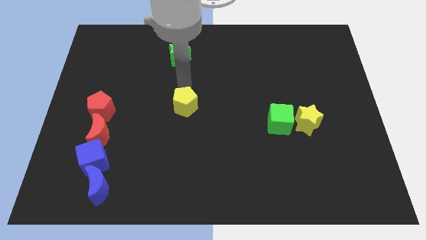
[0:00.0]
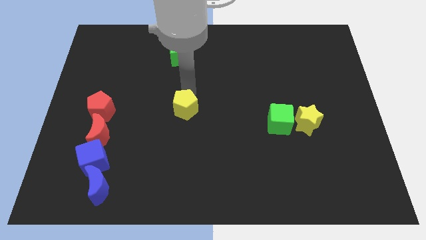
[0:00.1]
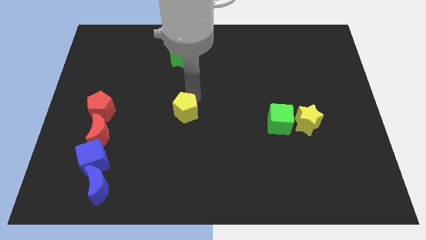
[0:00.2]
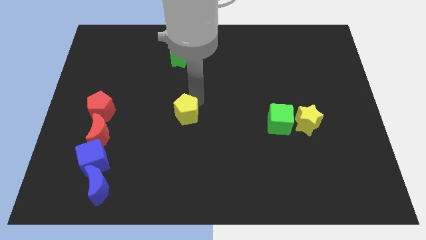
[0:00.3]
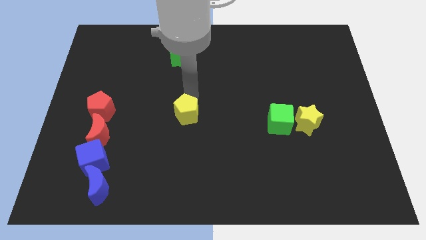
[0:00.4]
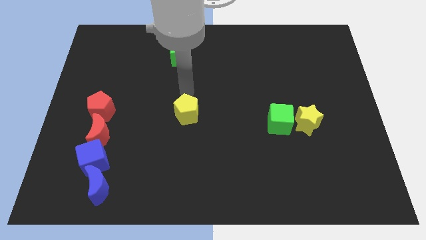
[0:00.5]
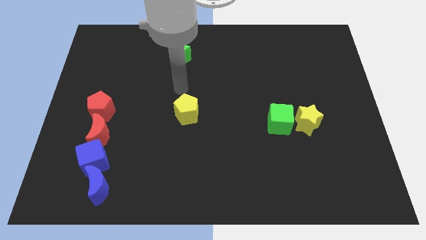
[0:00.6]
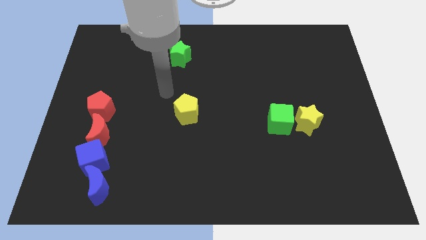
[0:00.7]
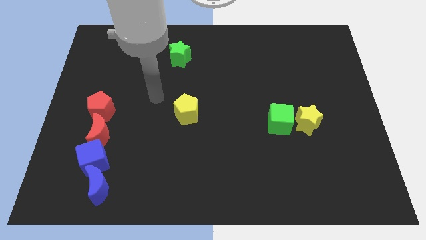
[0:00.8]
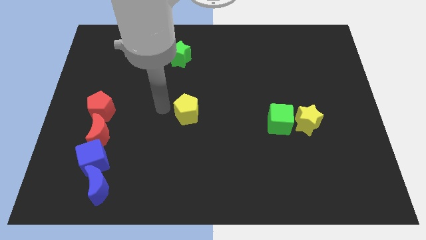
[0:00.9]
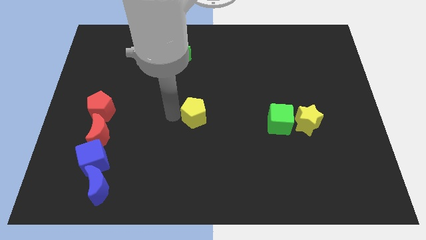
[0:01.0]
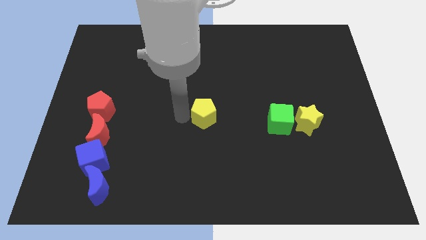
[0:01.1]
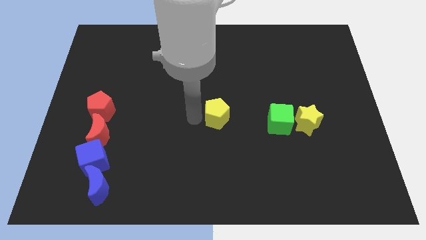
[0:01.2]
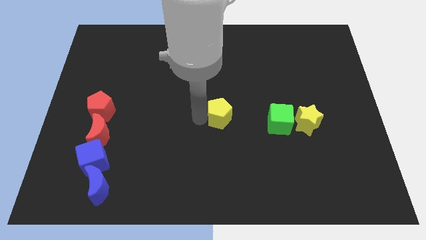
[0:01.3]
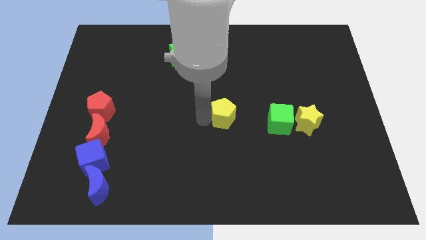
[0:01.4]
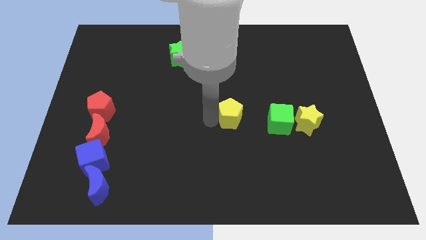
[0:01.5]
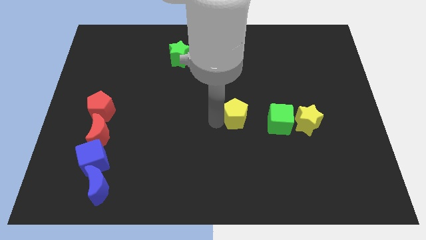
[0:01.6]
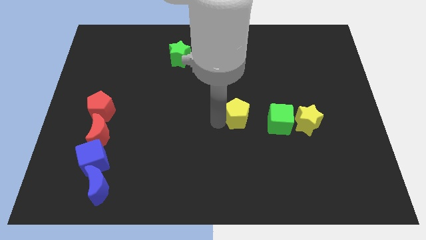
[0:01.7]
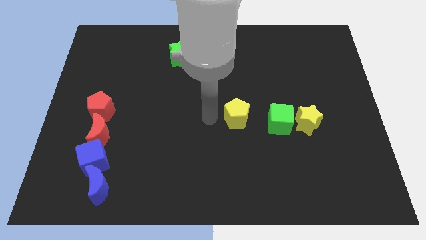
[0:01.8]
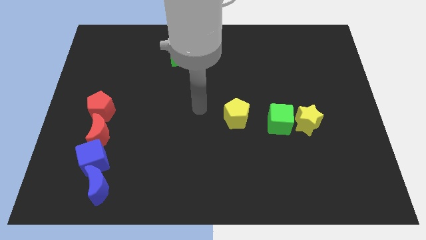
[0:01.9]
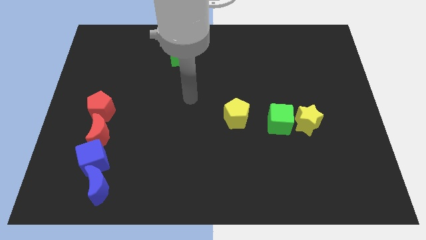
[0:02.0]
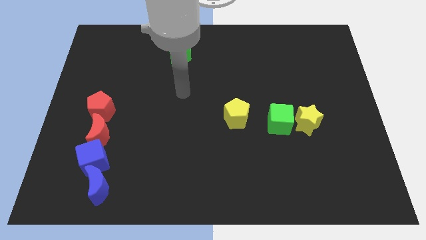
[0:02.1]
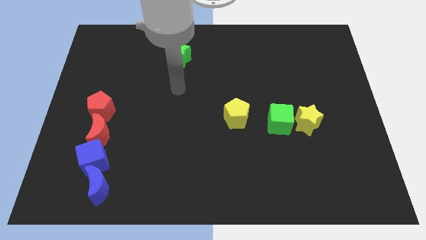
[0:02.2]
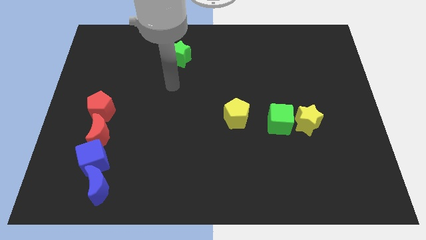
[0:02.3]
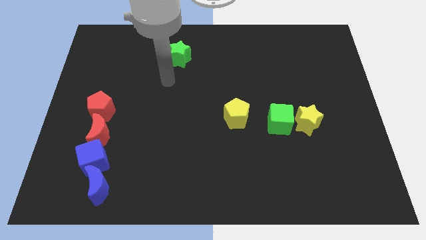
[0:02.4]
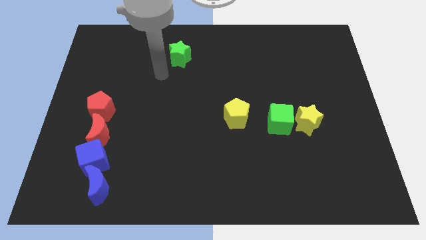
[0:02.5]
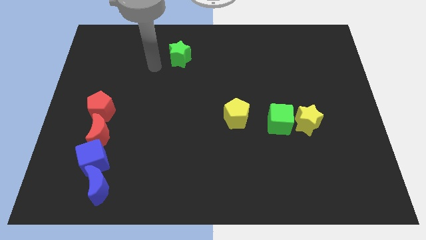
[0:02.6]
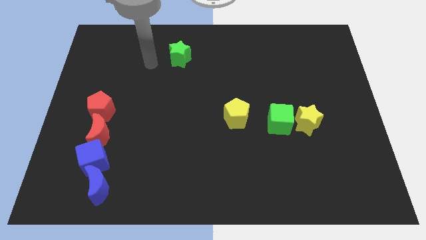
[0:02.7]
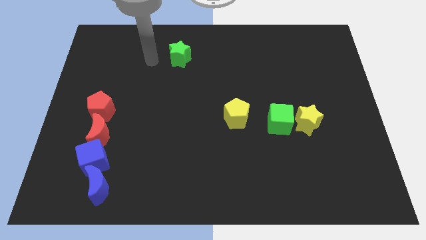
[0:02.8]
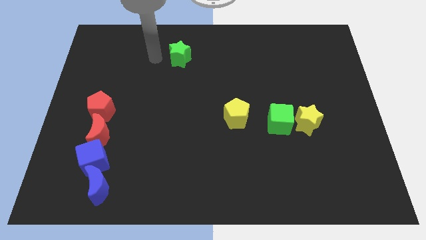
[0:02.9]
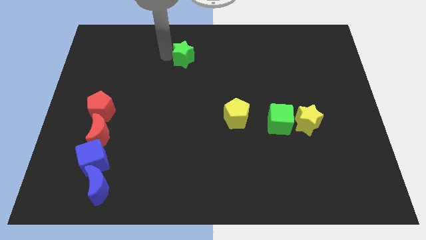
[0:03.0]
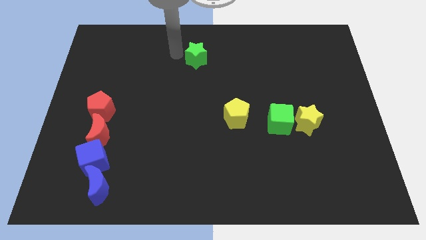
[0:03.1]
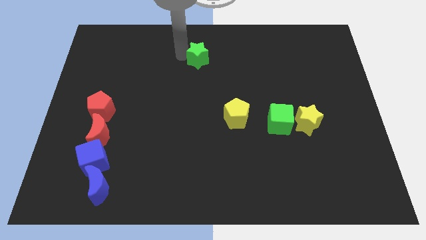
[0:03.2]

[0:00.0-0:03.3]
move the green star slightly towards to the right

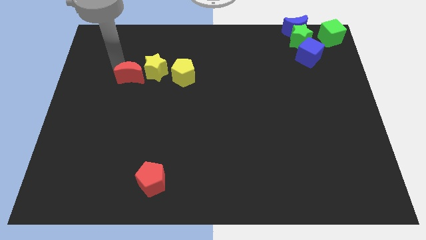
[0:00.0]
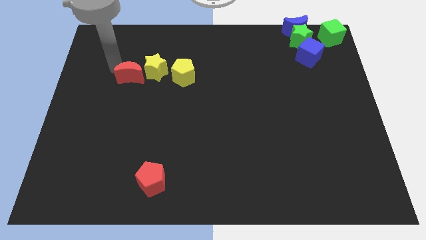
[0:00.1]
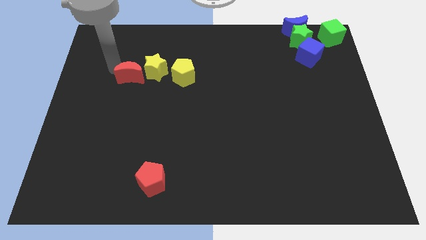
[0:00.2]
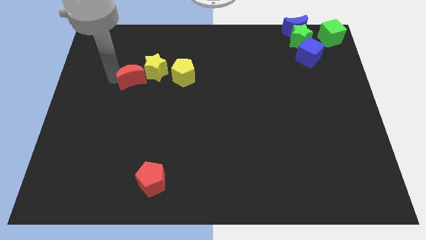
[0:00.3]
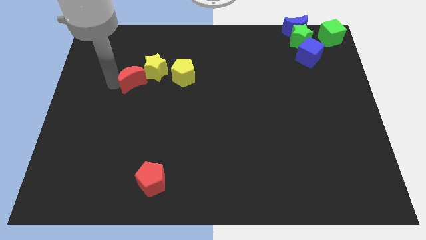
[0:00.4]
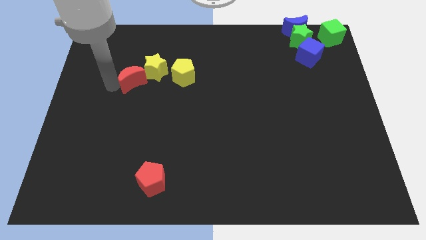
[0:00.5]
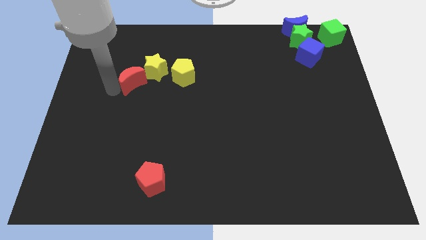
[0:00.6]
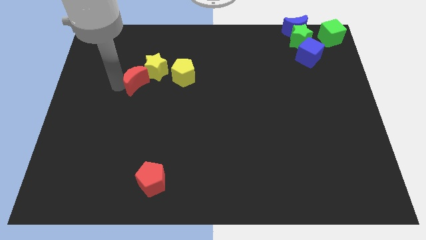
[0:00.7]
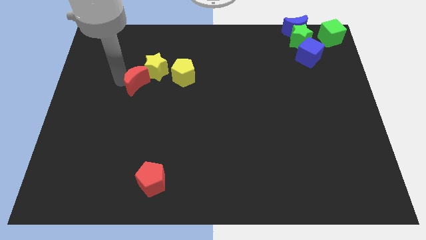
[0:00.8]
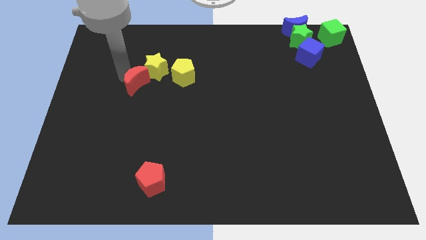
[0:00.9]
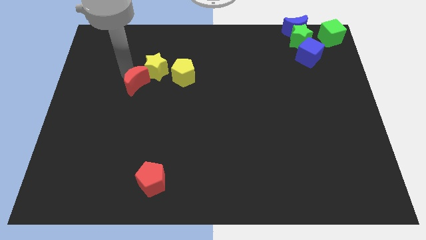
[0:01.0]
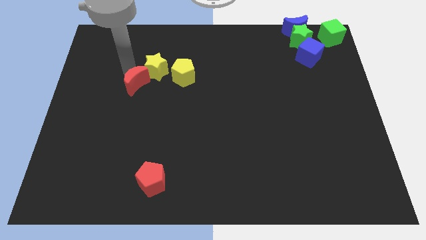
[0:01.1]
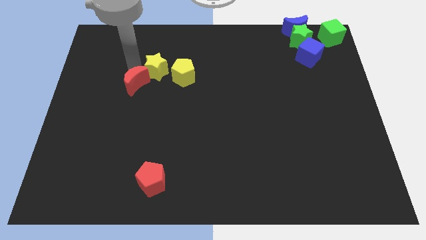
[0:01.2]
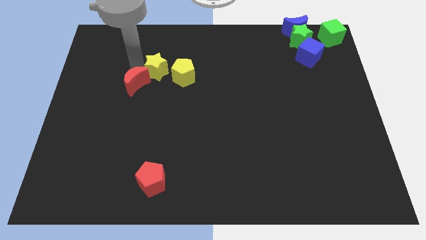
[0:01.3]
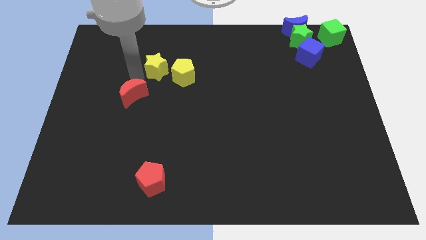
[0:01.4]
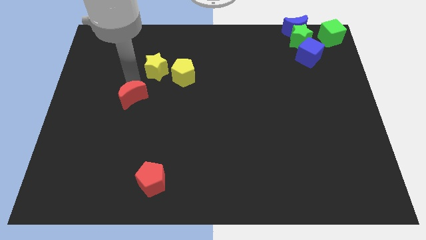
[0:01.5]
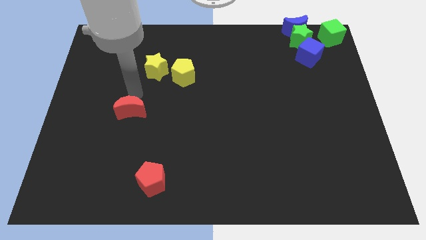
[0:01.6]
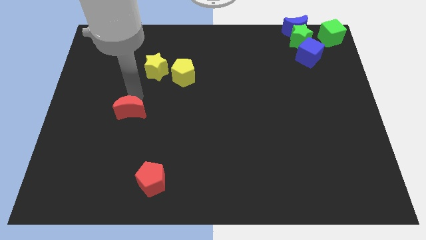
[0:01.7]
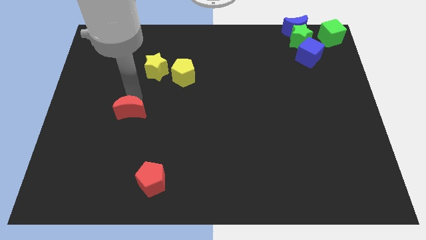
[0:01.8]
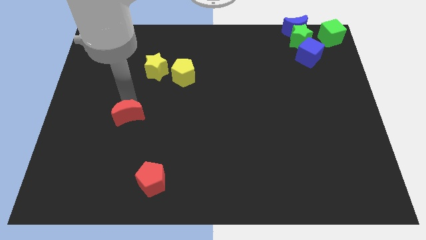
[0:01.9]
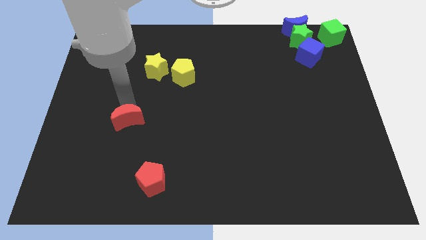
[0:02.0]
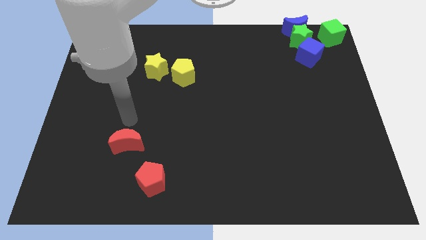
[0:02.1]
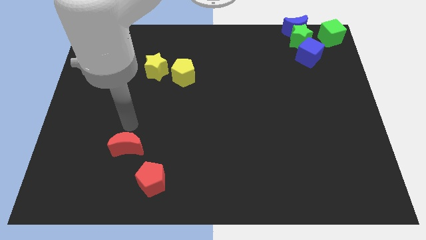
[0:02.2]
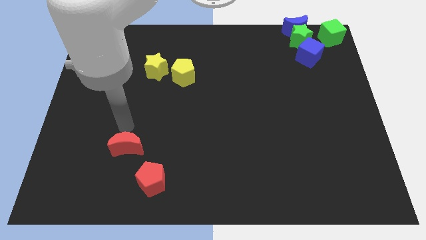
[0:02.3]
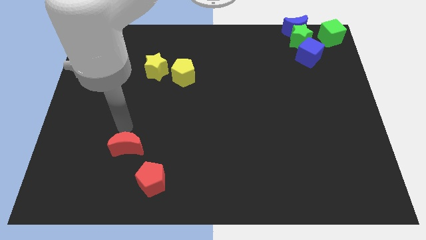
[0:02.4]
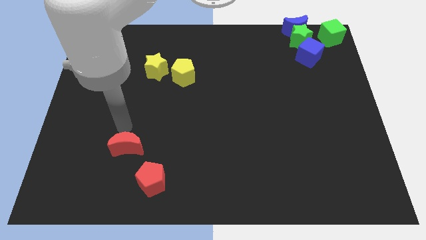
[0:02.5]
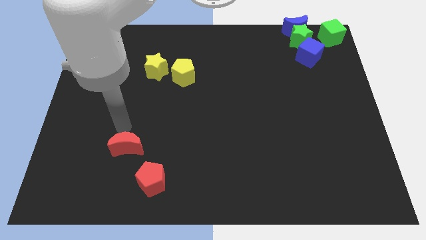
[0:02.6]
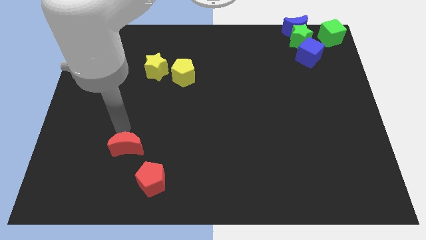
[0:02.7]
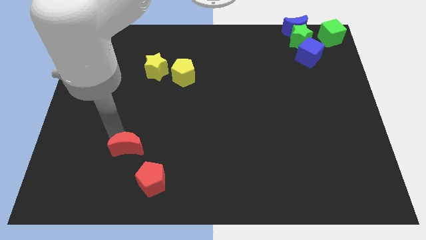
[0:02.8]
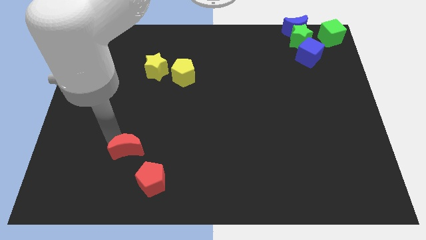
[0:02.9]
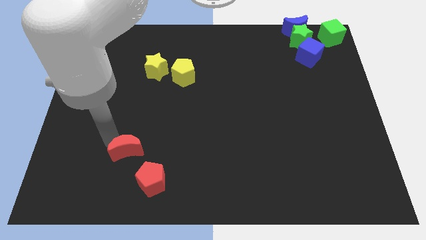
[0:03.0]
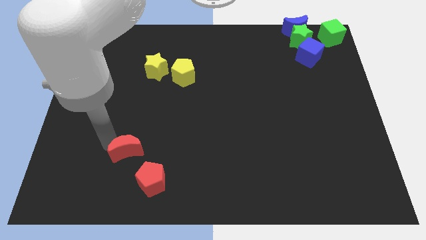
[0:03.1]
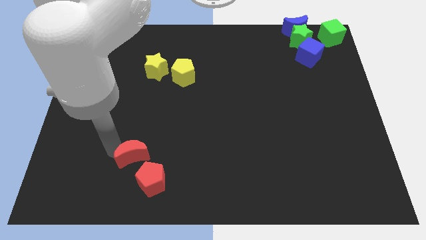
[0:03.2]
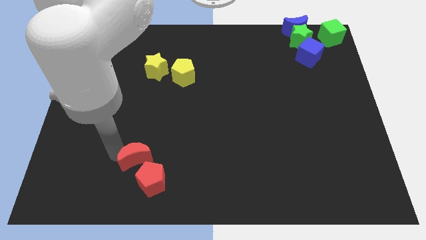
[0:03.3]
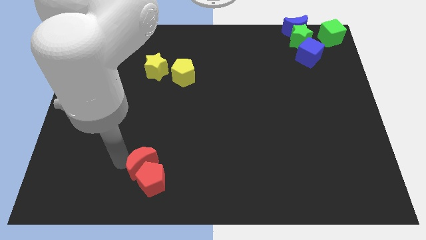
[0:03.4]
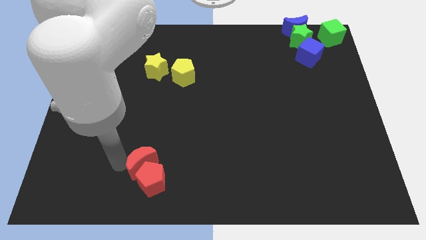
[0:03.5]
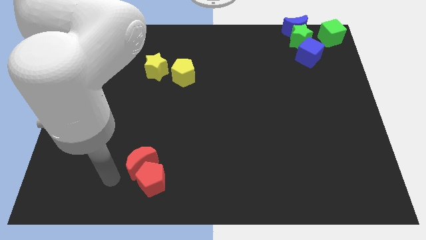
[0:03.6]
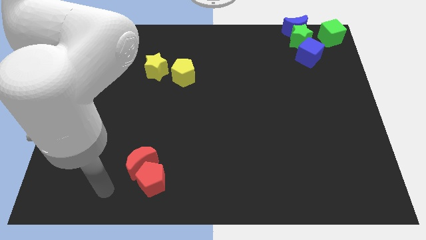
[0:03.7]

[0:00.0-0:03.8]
move the red crescent into the red pentagon

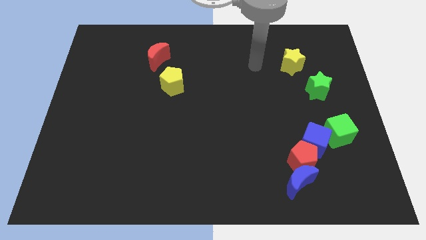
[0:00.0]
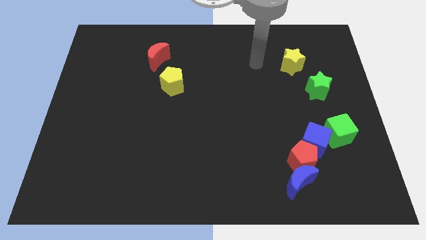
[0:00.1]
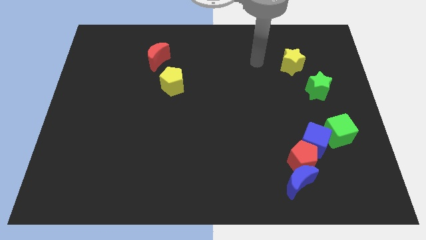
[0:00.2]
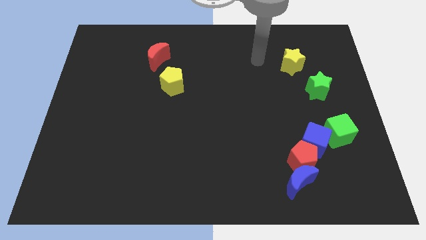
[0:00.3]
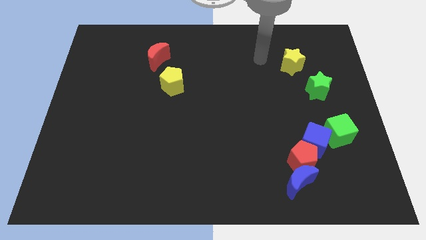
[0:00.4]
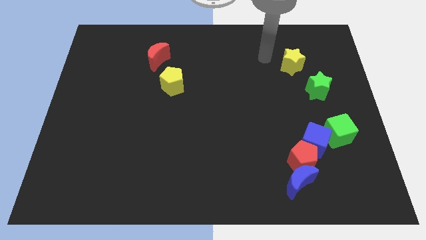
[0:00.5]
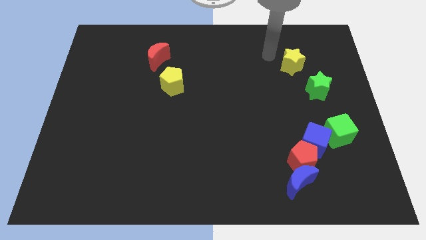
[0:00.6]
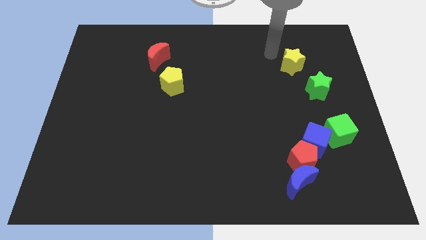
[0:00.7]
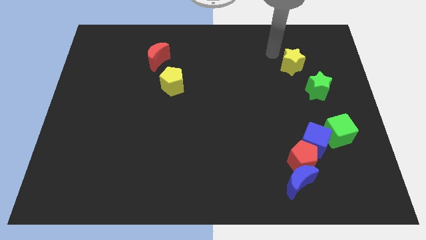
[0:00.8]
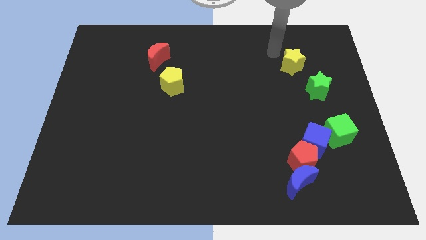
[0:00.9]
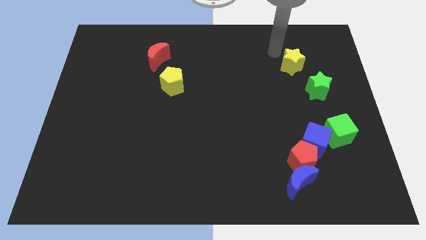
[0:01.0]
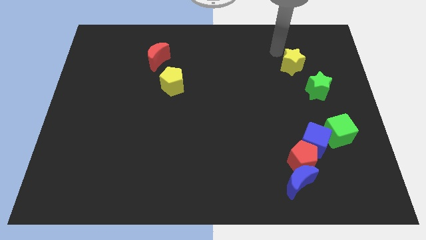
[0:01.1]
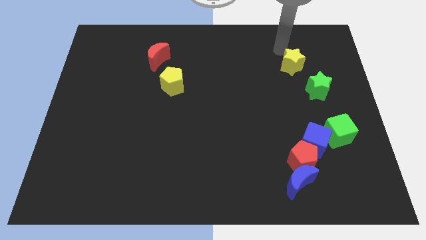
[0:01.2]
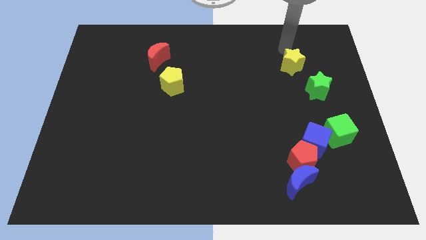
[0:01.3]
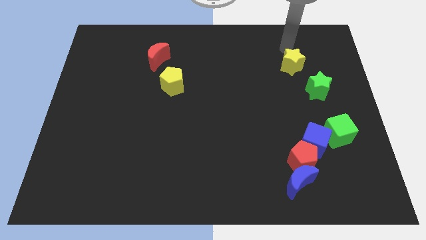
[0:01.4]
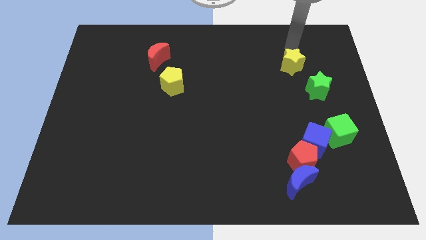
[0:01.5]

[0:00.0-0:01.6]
point your arm at the top of yellow star

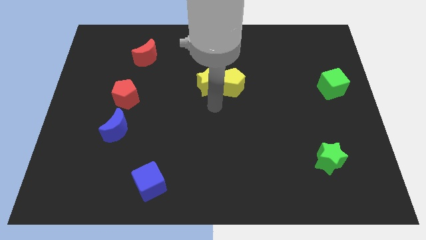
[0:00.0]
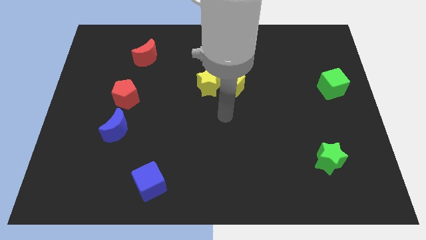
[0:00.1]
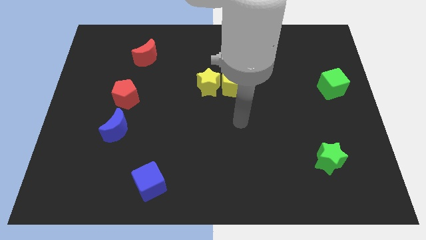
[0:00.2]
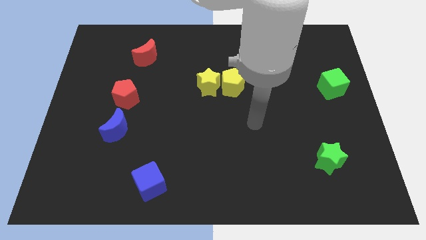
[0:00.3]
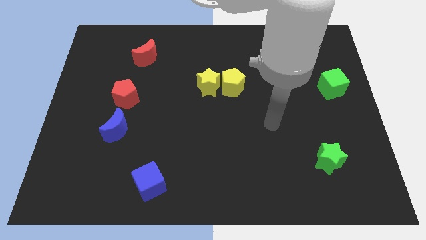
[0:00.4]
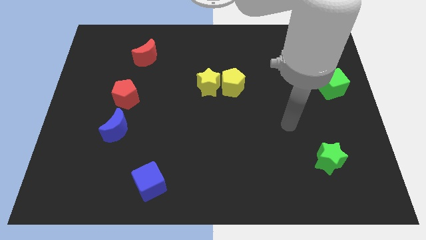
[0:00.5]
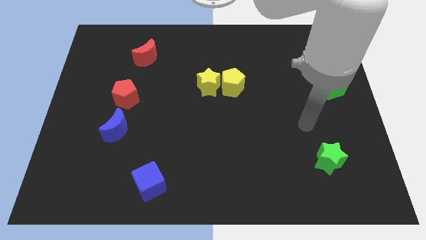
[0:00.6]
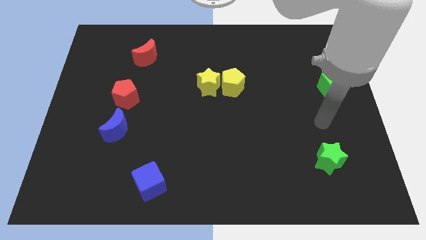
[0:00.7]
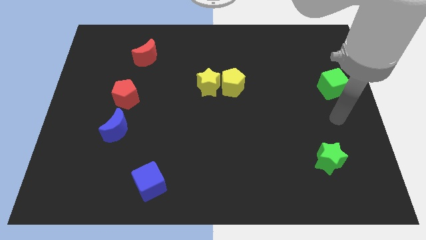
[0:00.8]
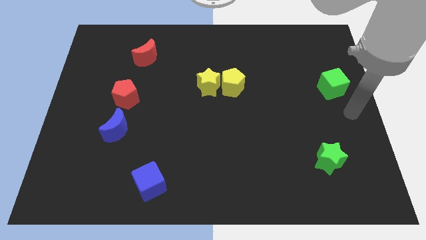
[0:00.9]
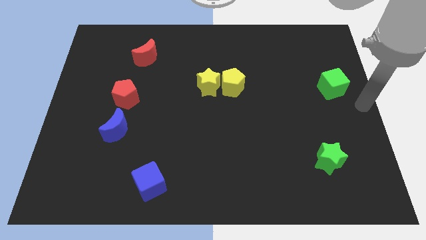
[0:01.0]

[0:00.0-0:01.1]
slide your arm to the center right of the table
